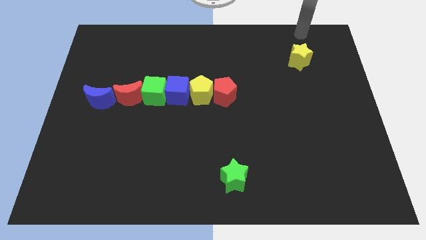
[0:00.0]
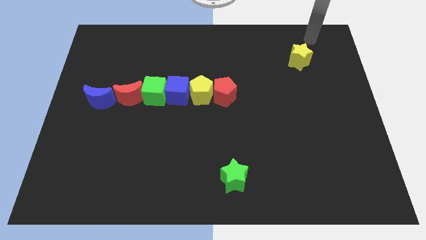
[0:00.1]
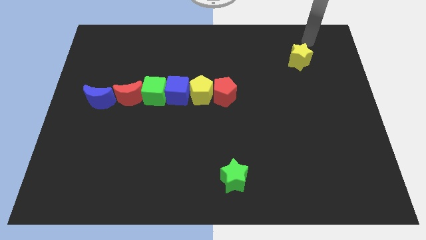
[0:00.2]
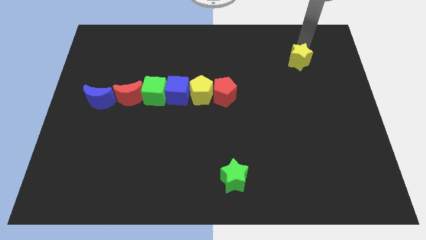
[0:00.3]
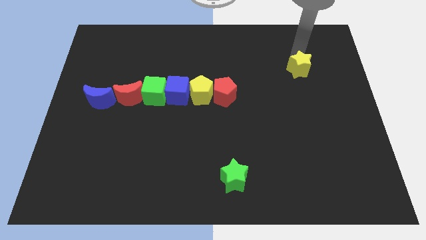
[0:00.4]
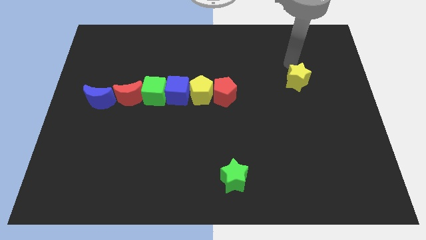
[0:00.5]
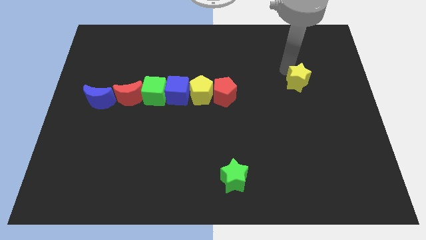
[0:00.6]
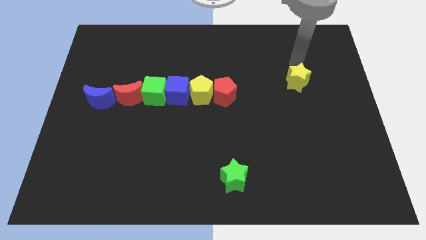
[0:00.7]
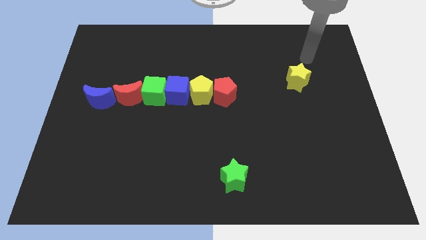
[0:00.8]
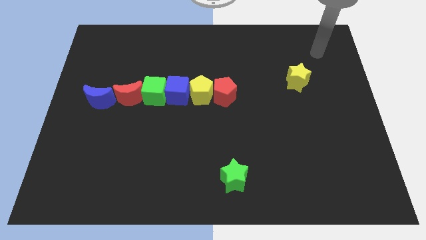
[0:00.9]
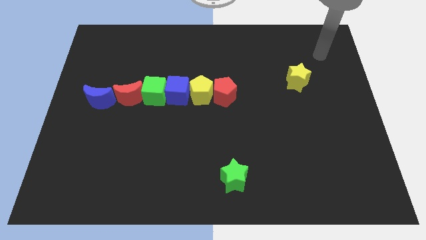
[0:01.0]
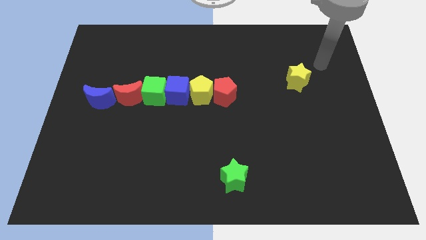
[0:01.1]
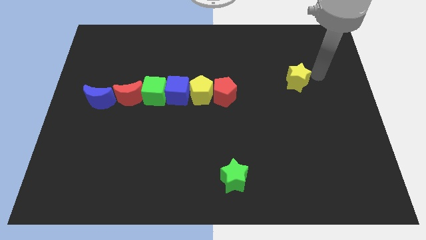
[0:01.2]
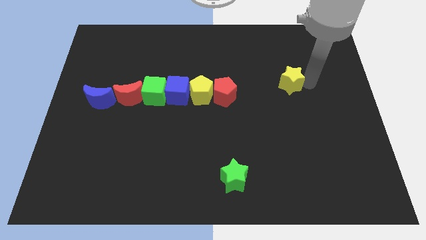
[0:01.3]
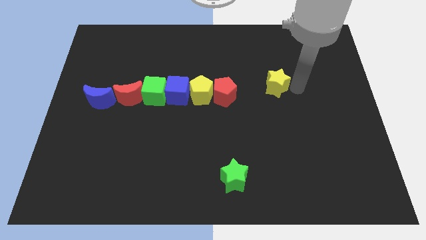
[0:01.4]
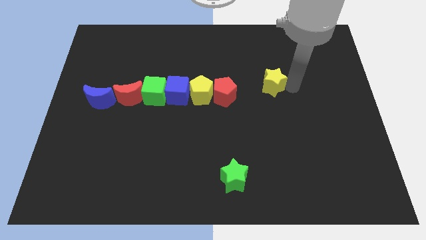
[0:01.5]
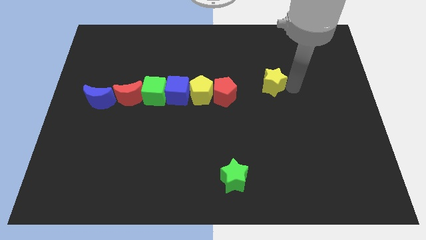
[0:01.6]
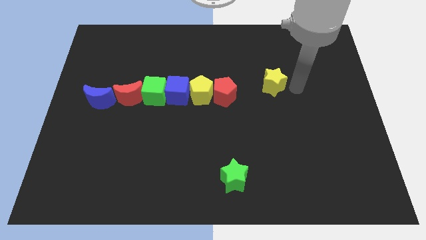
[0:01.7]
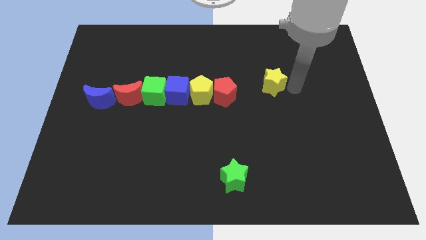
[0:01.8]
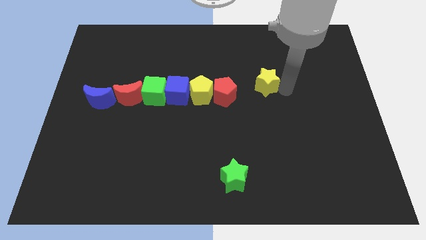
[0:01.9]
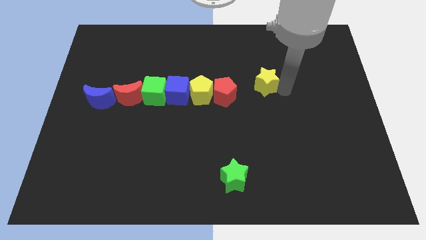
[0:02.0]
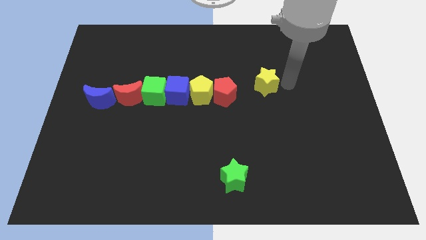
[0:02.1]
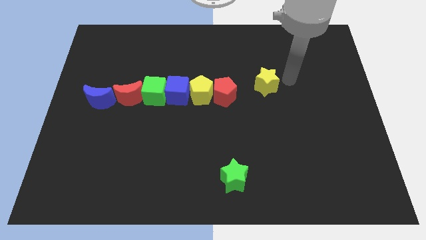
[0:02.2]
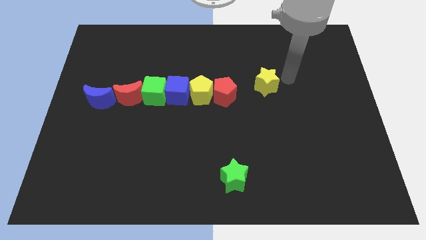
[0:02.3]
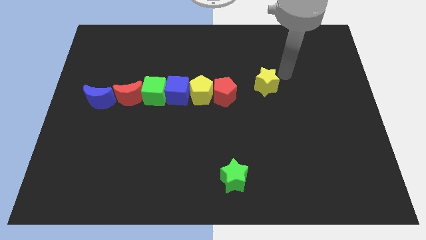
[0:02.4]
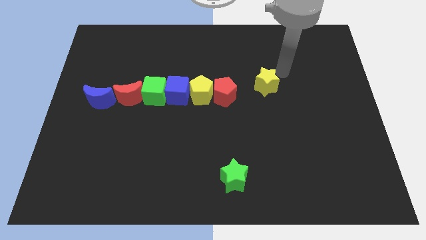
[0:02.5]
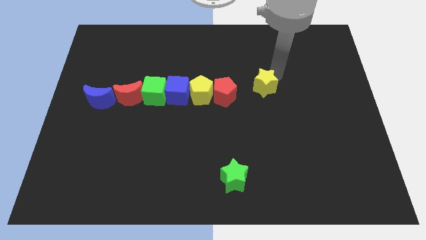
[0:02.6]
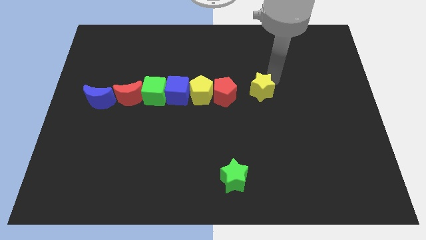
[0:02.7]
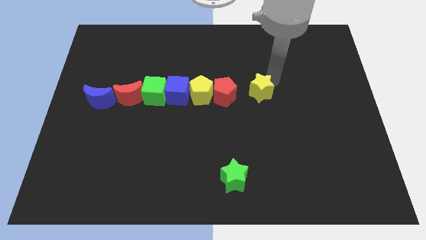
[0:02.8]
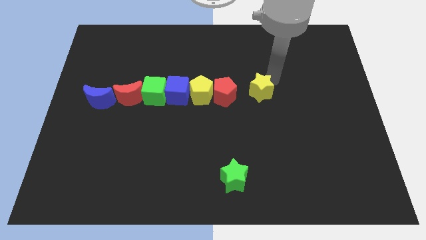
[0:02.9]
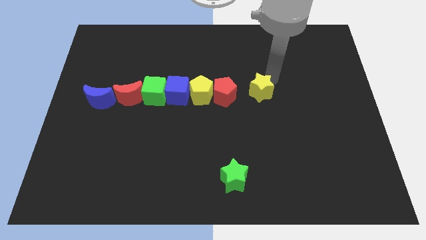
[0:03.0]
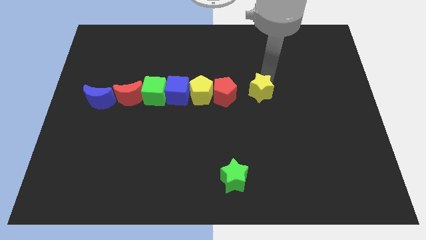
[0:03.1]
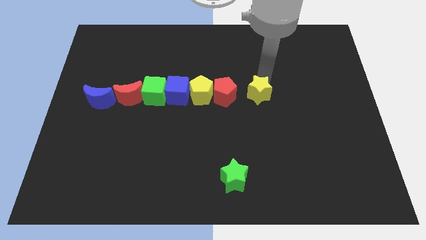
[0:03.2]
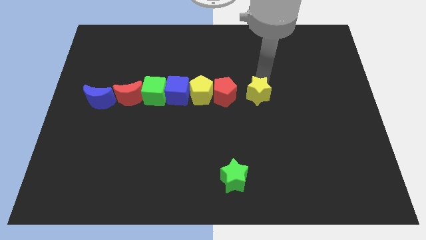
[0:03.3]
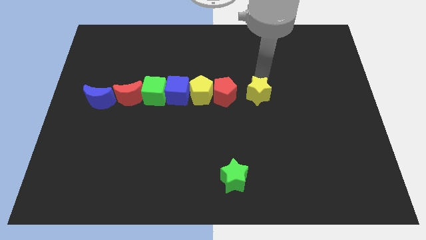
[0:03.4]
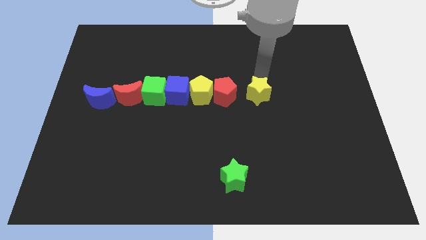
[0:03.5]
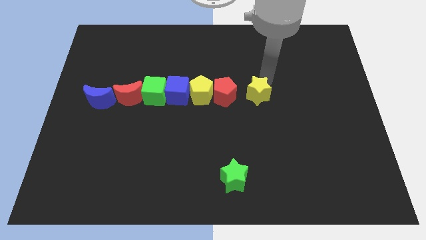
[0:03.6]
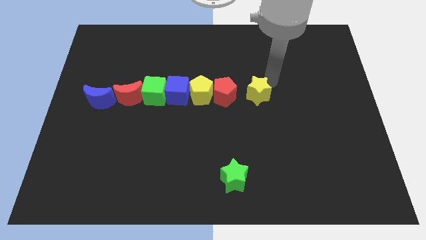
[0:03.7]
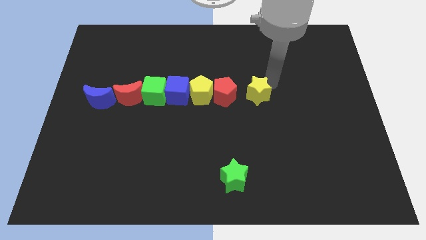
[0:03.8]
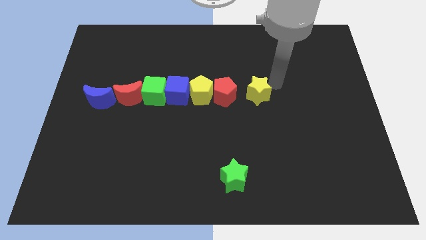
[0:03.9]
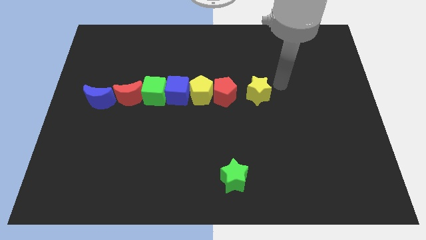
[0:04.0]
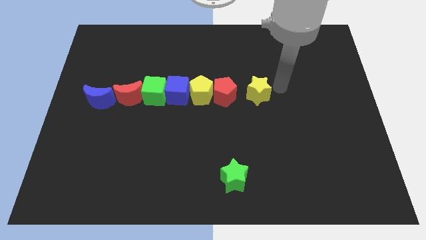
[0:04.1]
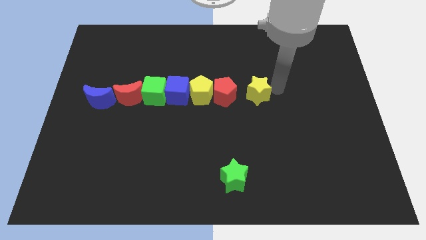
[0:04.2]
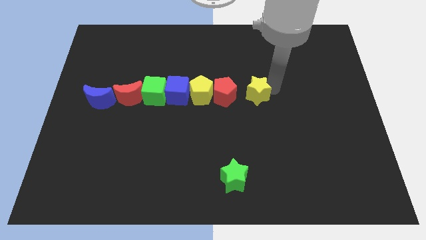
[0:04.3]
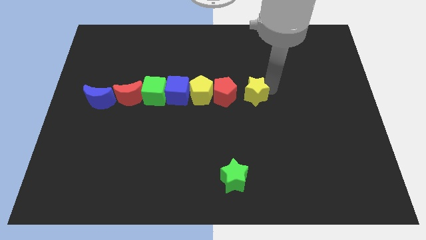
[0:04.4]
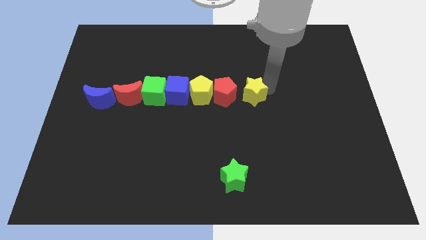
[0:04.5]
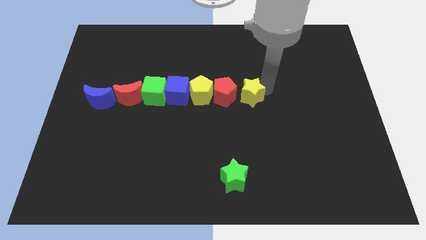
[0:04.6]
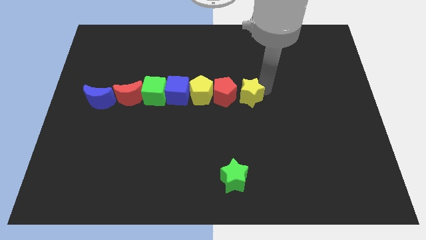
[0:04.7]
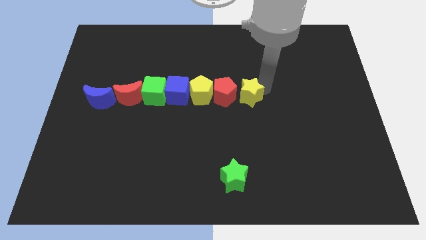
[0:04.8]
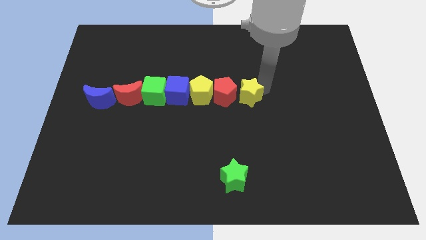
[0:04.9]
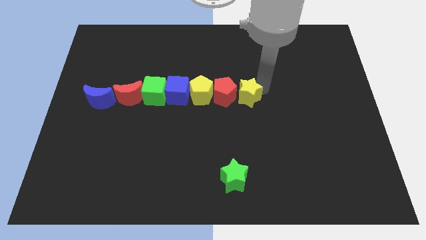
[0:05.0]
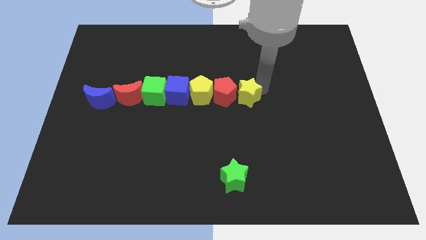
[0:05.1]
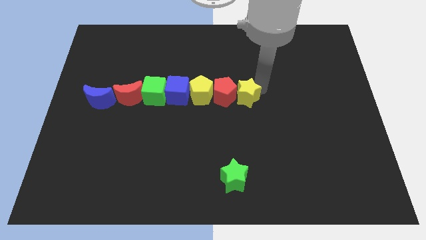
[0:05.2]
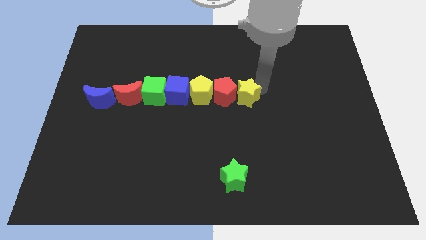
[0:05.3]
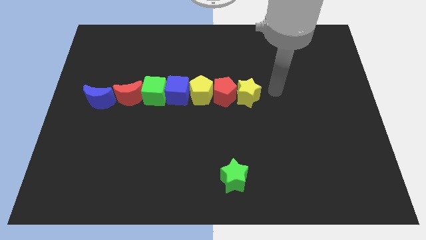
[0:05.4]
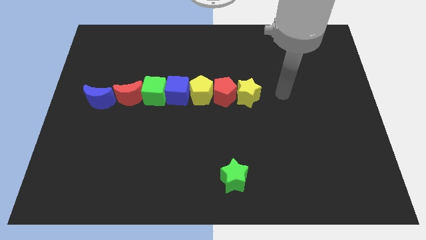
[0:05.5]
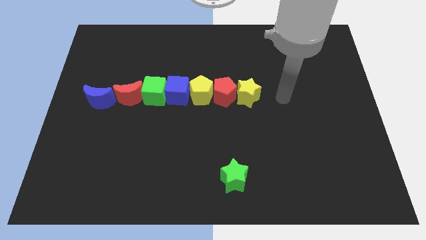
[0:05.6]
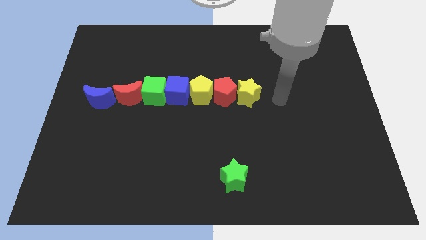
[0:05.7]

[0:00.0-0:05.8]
place the yellow star to the right of the red pentagon

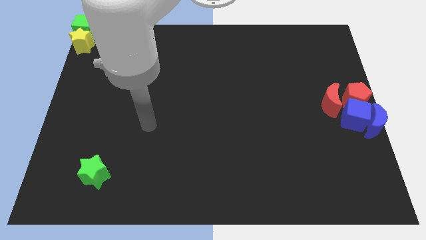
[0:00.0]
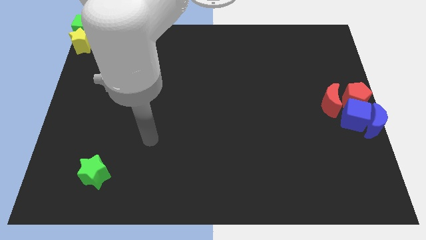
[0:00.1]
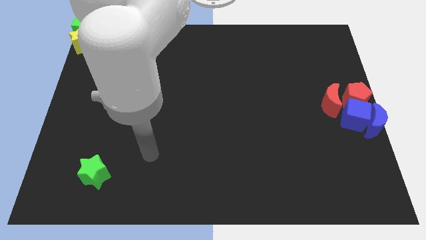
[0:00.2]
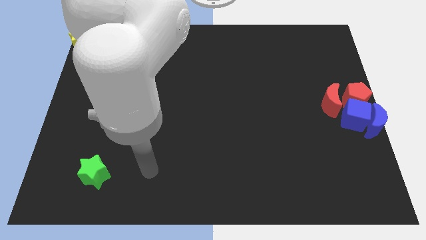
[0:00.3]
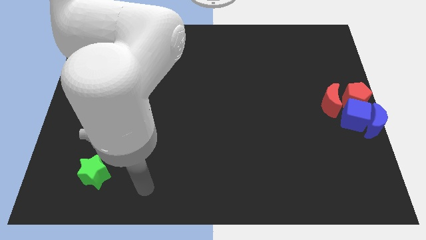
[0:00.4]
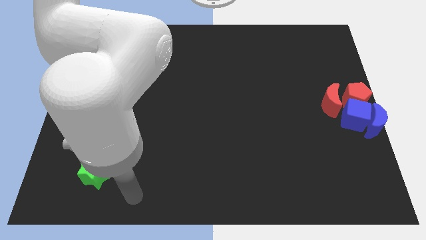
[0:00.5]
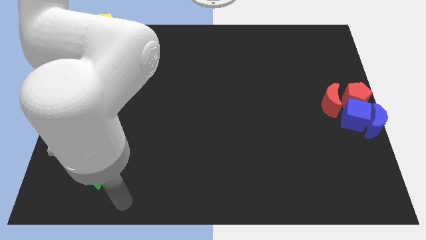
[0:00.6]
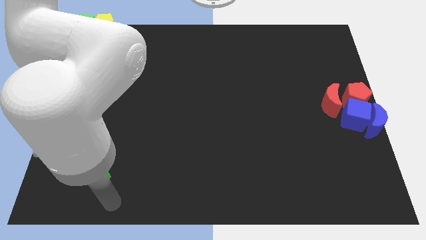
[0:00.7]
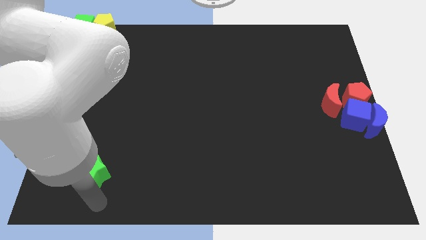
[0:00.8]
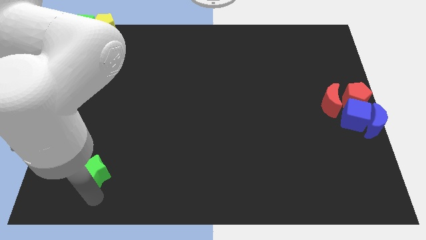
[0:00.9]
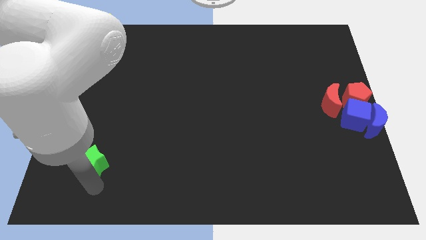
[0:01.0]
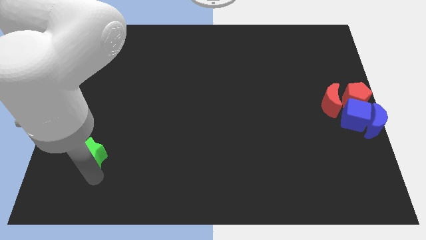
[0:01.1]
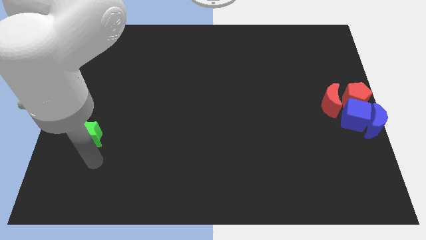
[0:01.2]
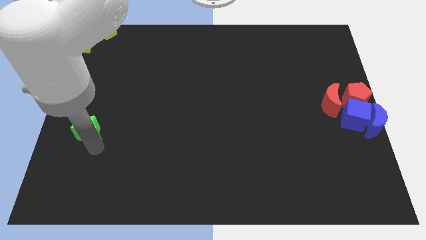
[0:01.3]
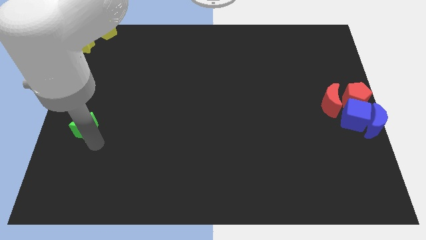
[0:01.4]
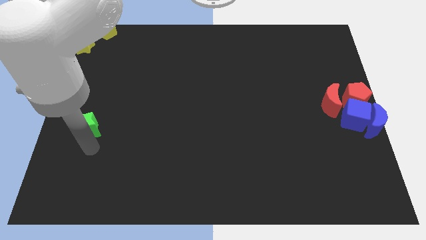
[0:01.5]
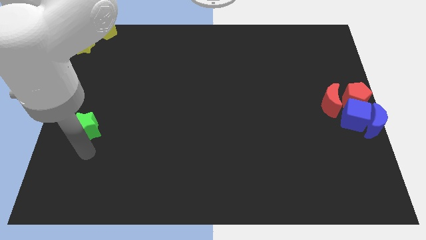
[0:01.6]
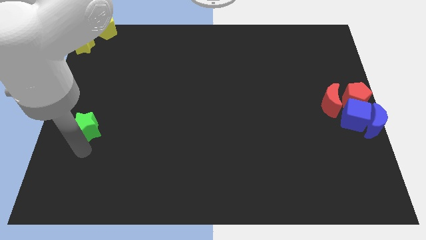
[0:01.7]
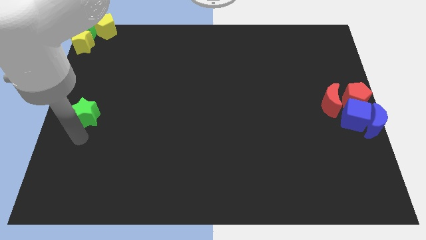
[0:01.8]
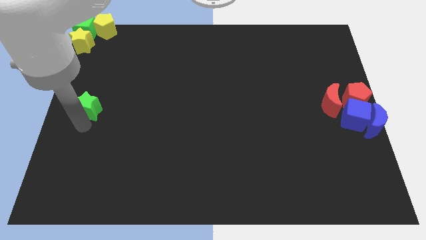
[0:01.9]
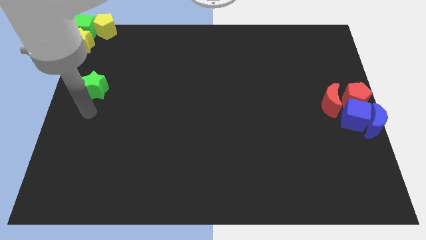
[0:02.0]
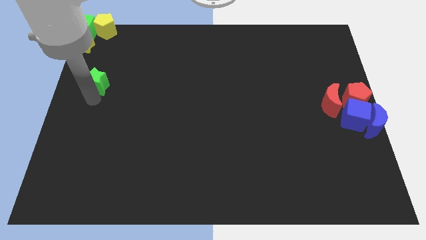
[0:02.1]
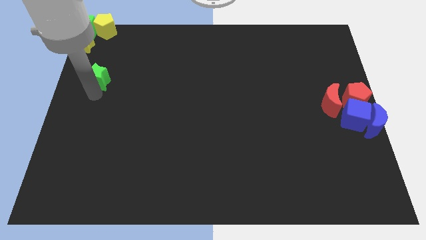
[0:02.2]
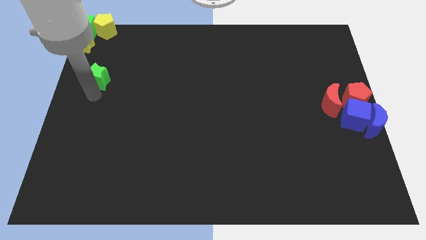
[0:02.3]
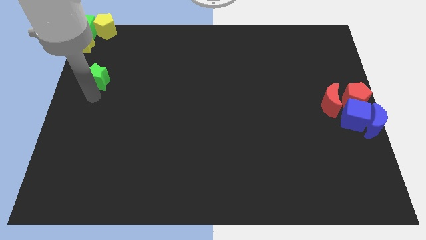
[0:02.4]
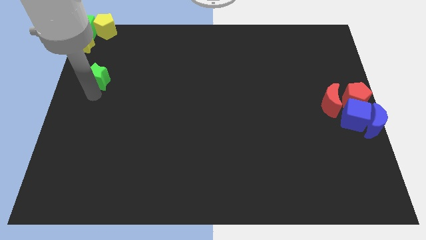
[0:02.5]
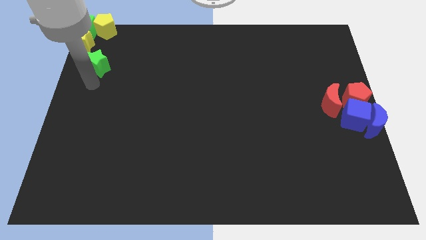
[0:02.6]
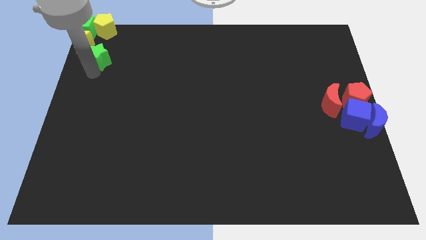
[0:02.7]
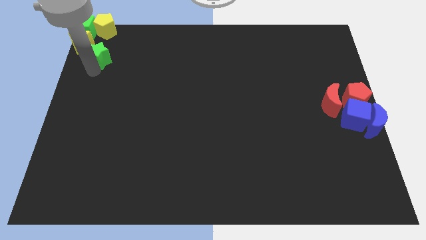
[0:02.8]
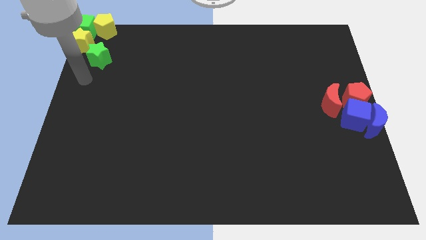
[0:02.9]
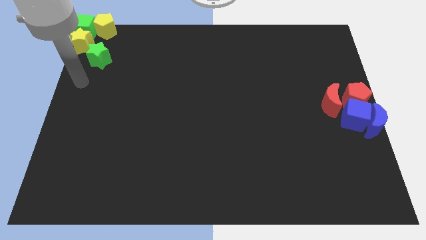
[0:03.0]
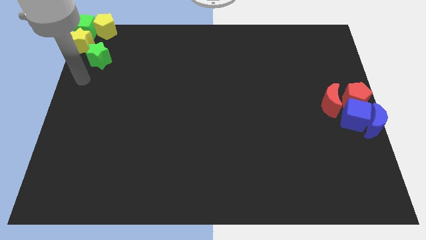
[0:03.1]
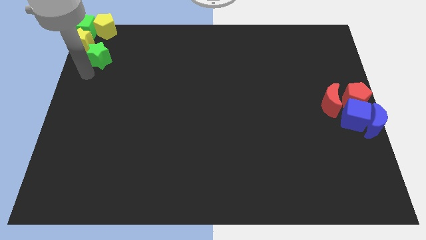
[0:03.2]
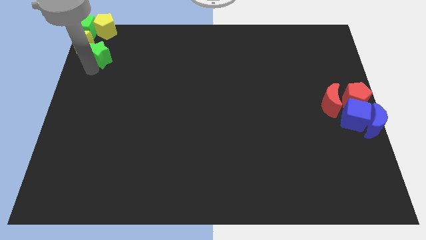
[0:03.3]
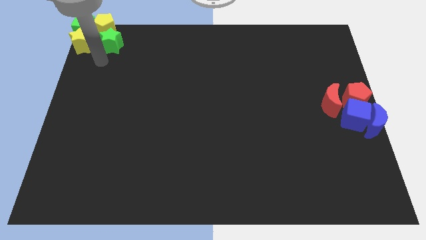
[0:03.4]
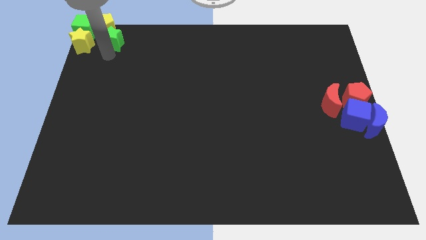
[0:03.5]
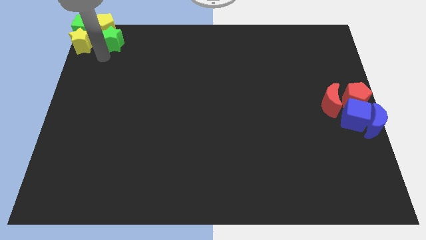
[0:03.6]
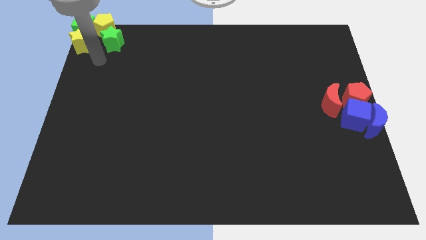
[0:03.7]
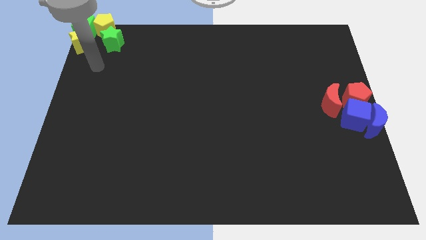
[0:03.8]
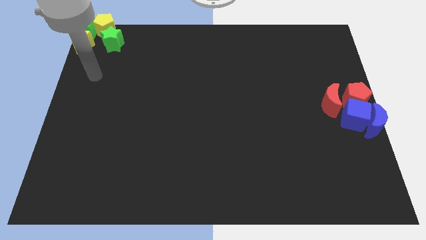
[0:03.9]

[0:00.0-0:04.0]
push the green star to the bottom right side of the yellow pentagon
